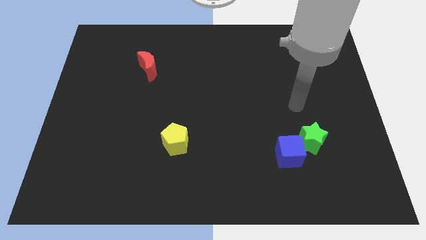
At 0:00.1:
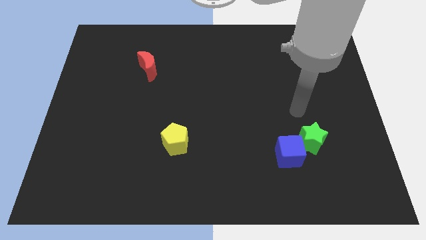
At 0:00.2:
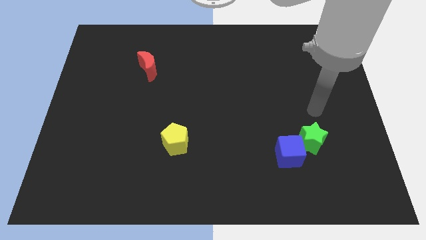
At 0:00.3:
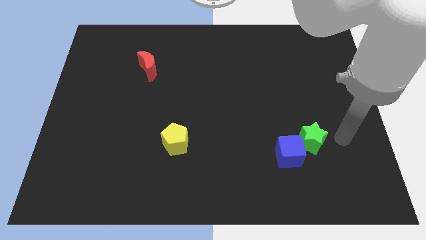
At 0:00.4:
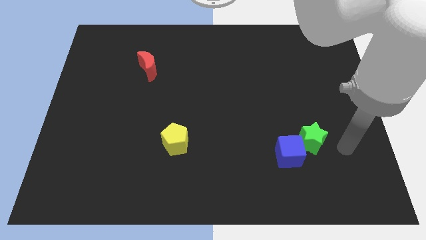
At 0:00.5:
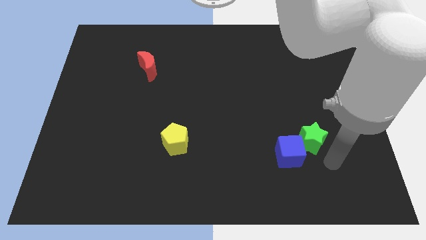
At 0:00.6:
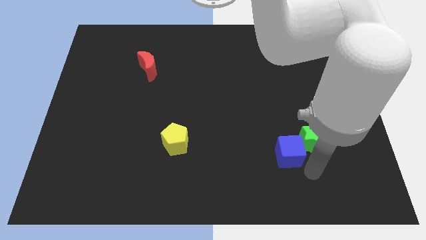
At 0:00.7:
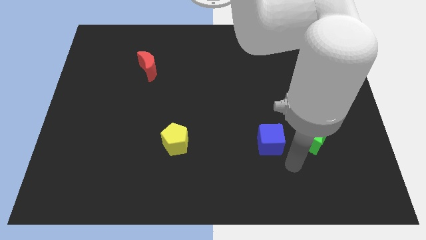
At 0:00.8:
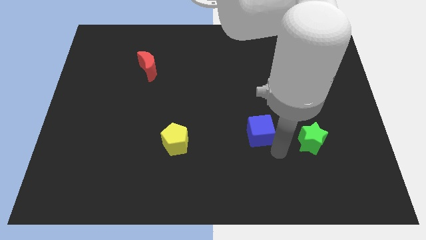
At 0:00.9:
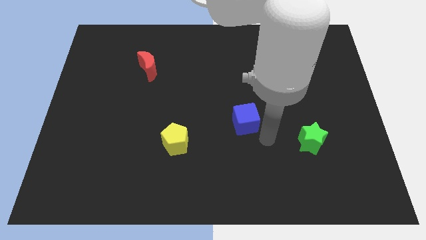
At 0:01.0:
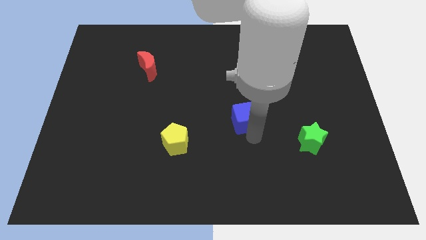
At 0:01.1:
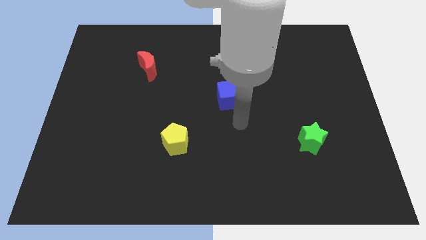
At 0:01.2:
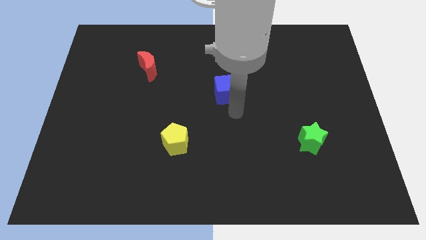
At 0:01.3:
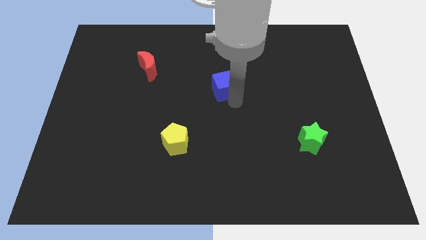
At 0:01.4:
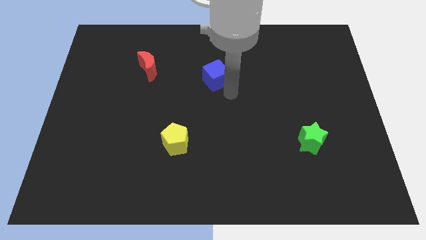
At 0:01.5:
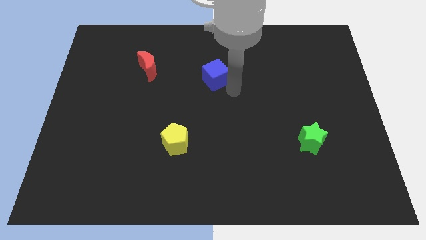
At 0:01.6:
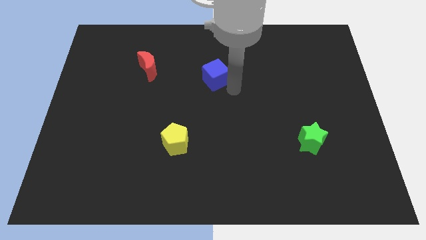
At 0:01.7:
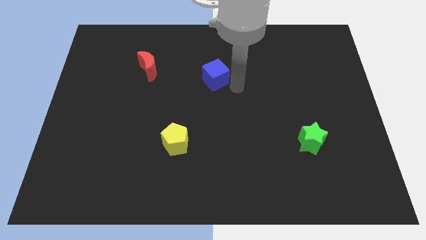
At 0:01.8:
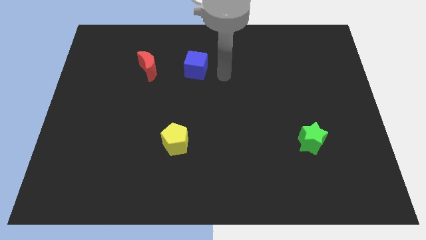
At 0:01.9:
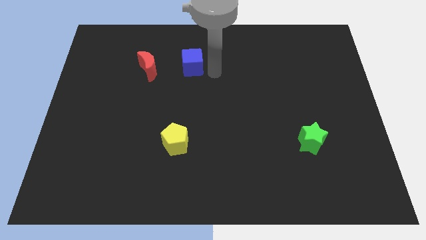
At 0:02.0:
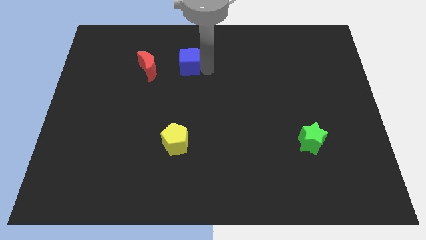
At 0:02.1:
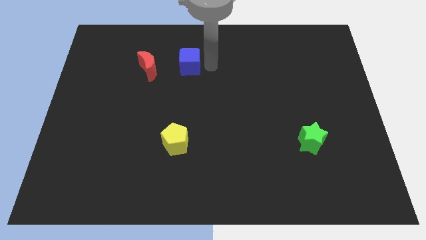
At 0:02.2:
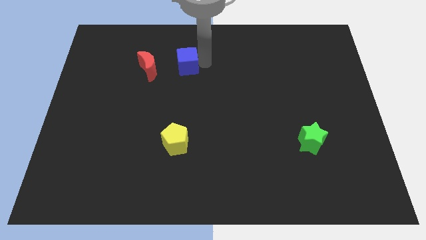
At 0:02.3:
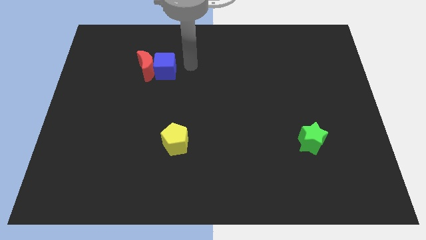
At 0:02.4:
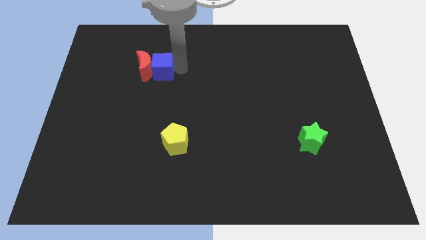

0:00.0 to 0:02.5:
move the blue cube close to the red moon

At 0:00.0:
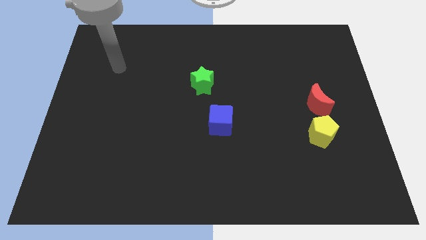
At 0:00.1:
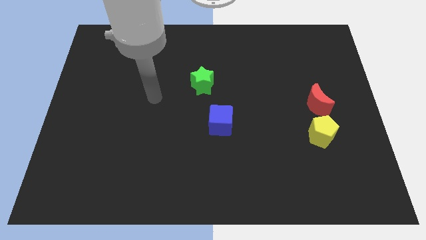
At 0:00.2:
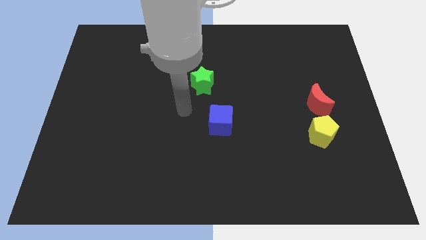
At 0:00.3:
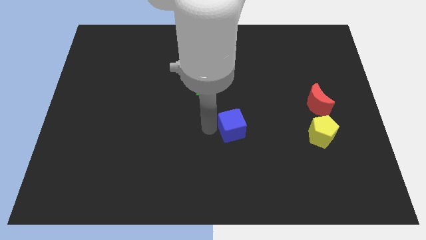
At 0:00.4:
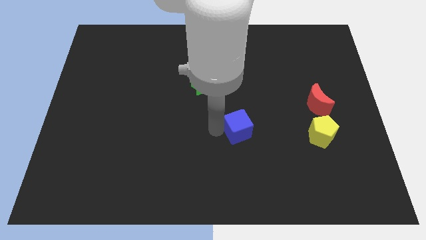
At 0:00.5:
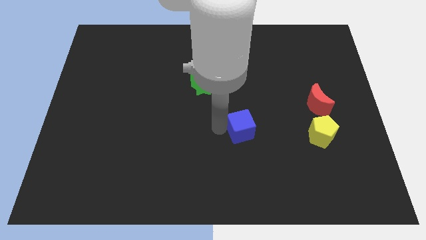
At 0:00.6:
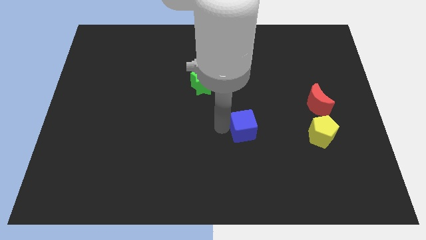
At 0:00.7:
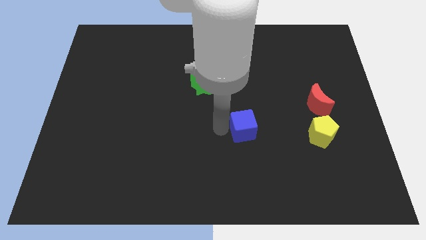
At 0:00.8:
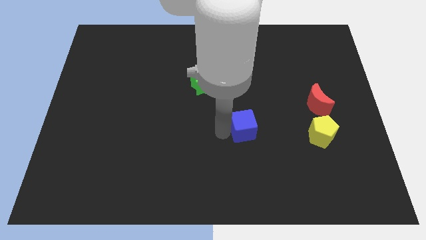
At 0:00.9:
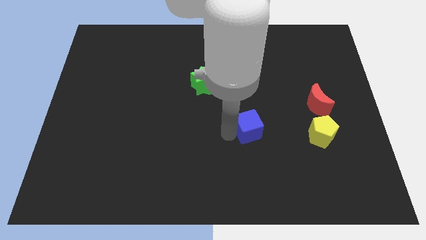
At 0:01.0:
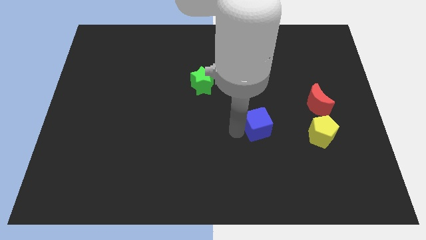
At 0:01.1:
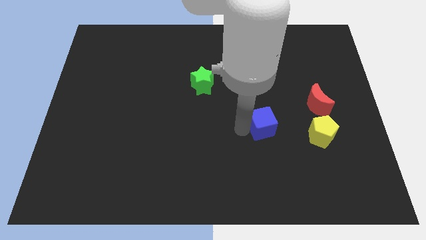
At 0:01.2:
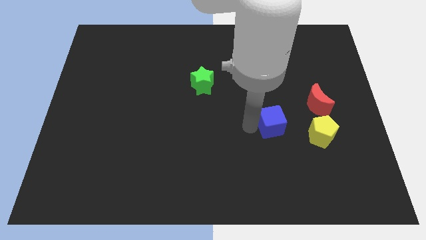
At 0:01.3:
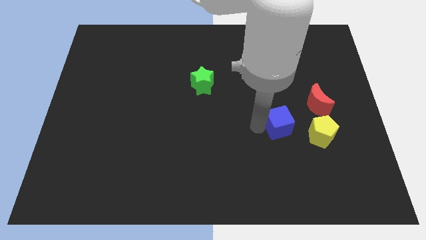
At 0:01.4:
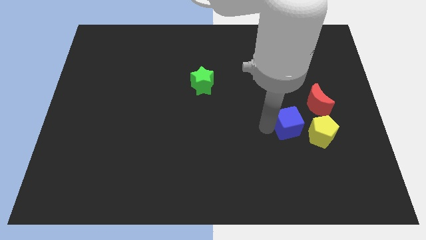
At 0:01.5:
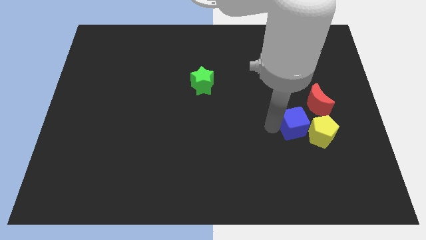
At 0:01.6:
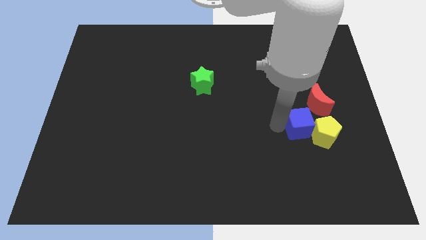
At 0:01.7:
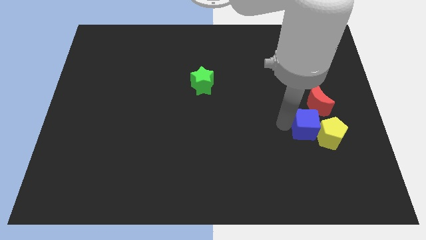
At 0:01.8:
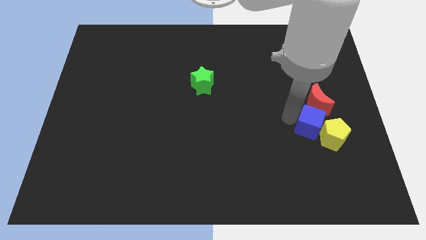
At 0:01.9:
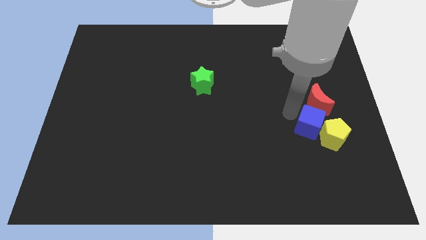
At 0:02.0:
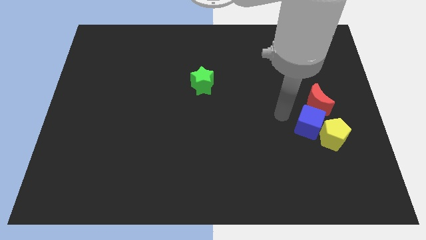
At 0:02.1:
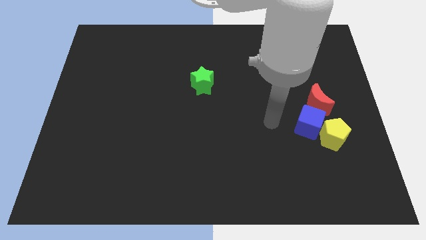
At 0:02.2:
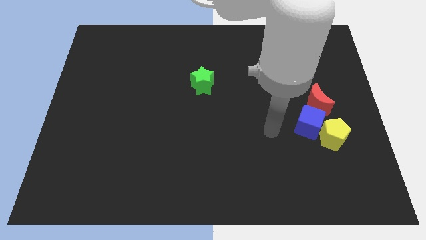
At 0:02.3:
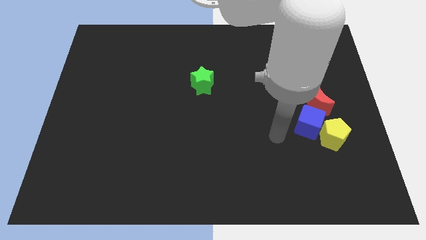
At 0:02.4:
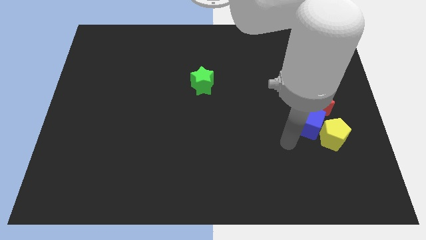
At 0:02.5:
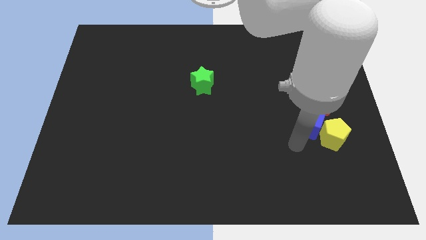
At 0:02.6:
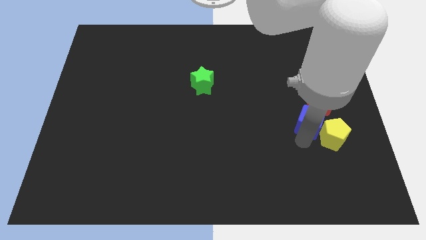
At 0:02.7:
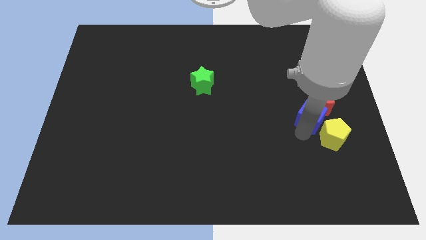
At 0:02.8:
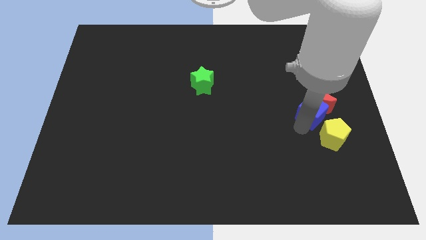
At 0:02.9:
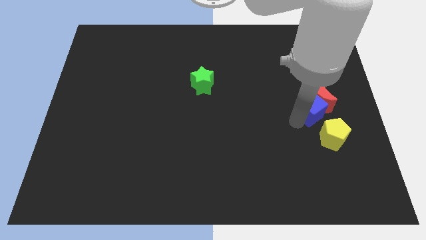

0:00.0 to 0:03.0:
put the blue cube to the red moon

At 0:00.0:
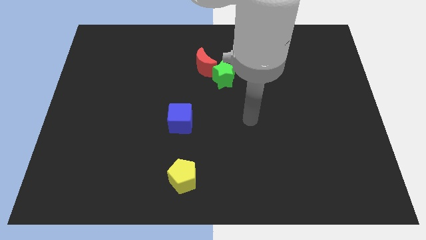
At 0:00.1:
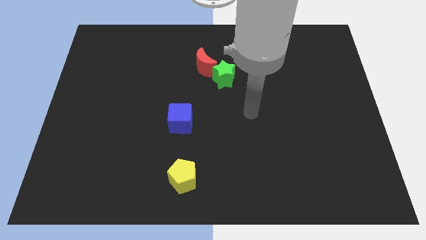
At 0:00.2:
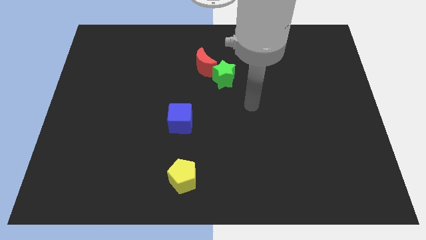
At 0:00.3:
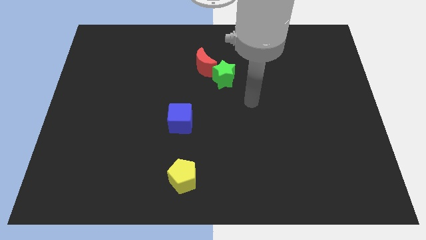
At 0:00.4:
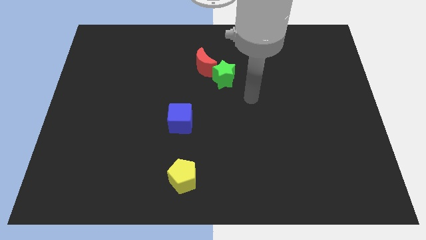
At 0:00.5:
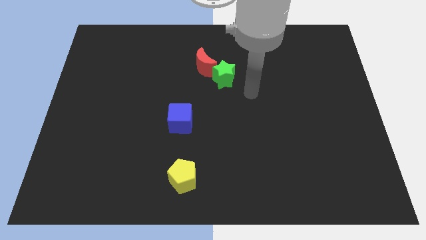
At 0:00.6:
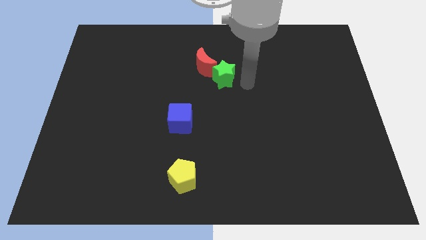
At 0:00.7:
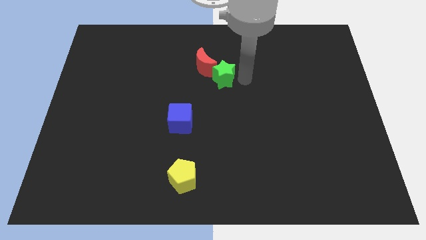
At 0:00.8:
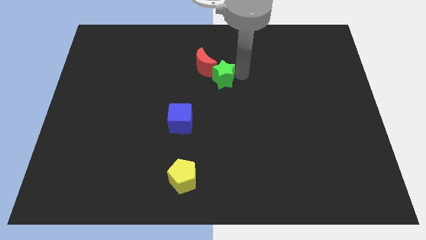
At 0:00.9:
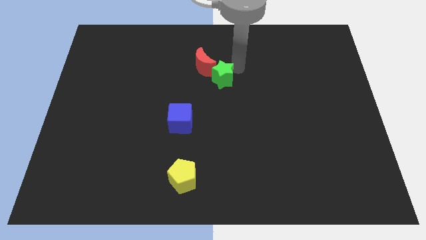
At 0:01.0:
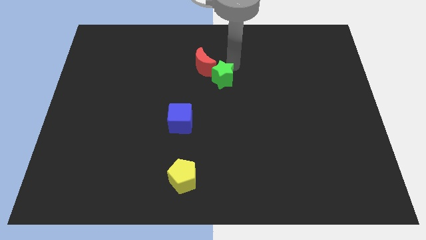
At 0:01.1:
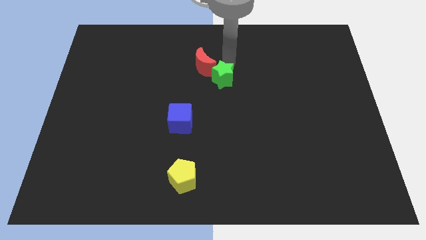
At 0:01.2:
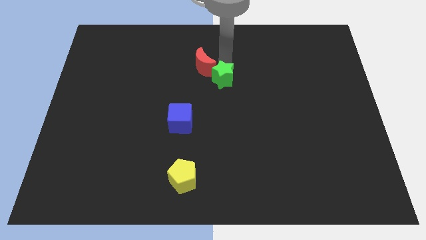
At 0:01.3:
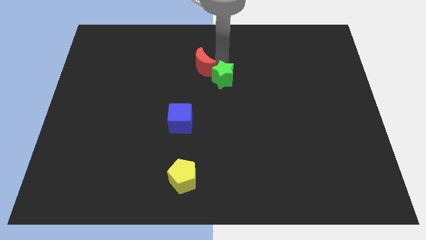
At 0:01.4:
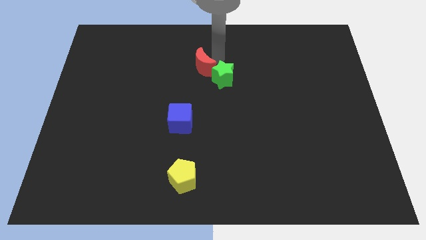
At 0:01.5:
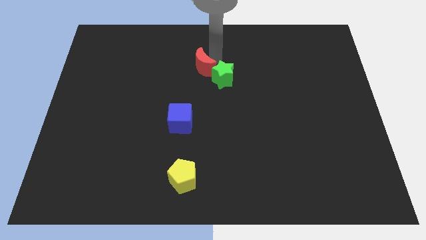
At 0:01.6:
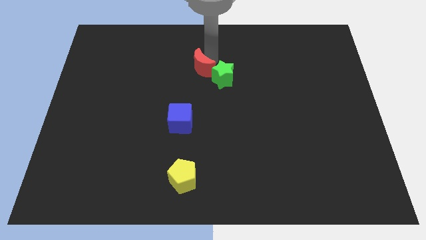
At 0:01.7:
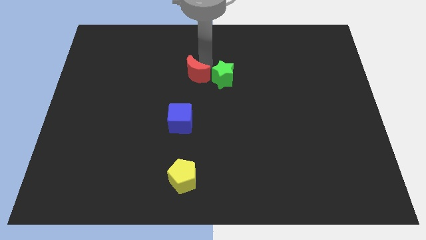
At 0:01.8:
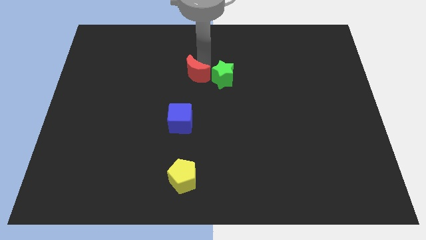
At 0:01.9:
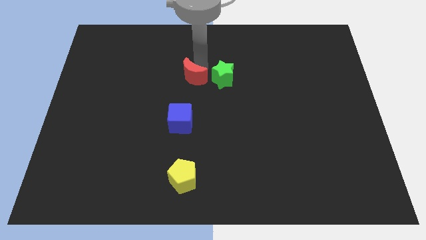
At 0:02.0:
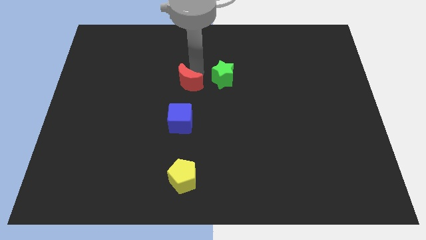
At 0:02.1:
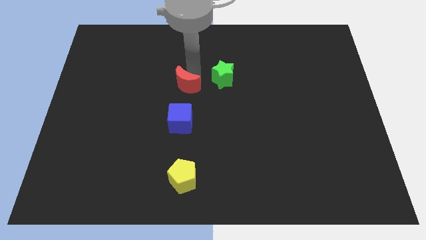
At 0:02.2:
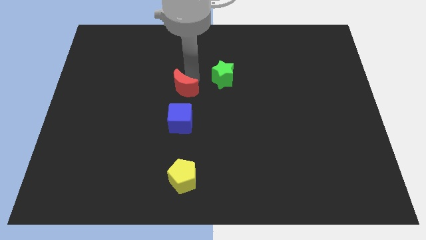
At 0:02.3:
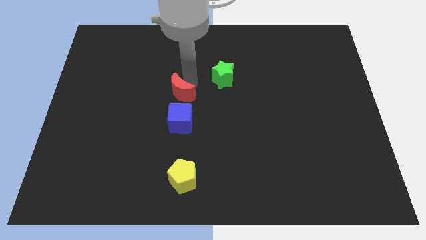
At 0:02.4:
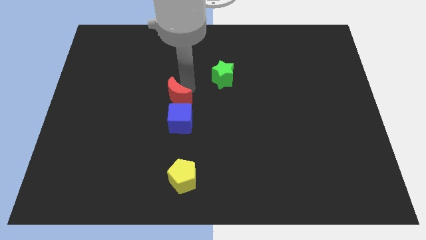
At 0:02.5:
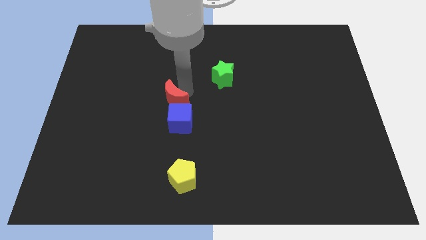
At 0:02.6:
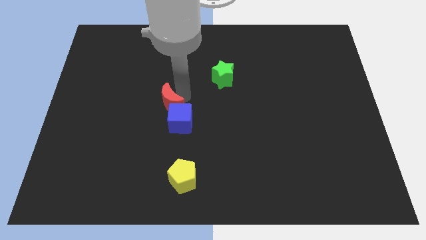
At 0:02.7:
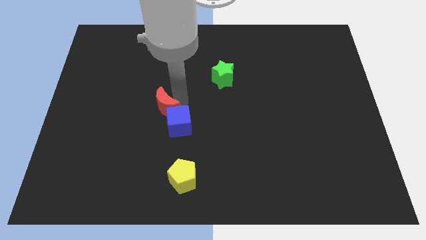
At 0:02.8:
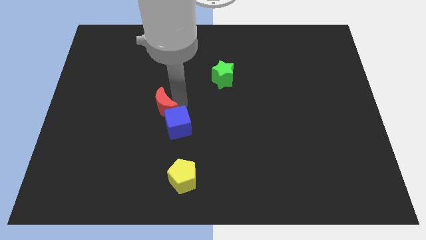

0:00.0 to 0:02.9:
slide the red moon to the blue block
